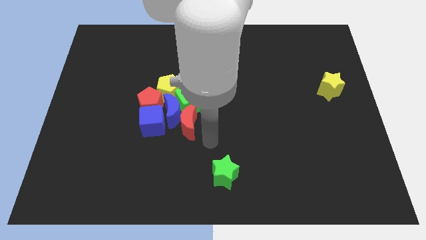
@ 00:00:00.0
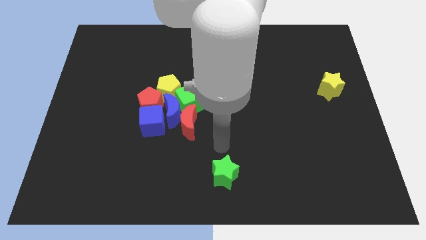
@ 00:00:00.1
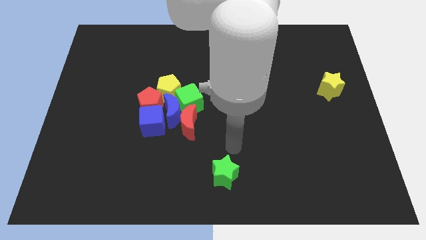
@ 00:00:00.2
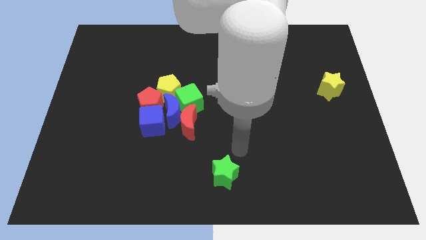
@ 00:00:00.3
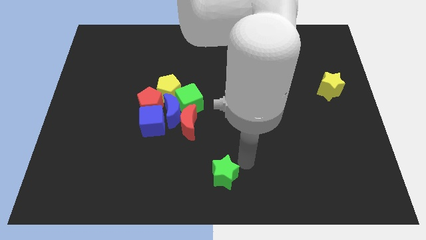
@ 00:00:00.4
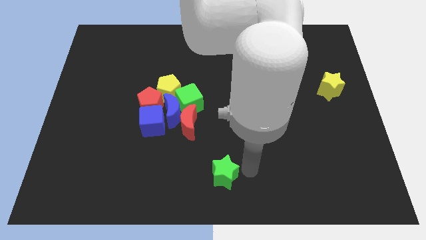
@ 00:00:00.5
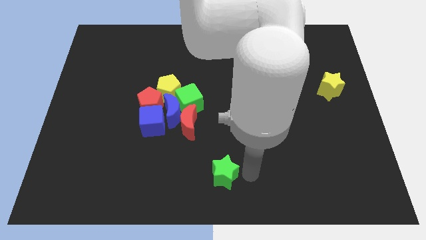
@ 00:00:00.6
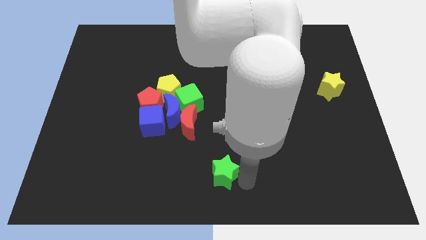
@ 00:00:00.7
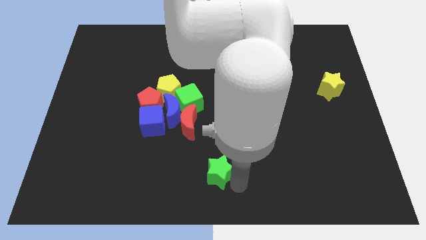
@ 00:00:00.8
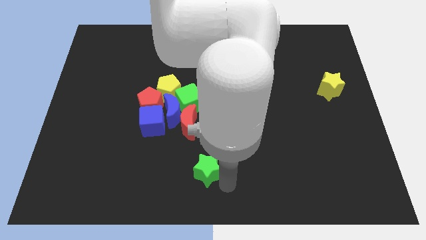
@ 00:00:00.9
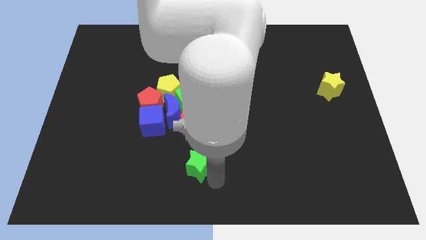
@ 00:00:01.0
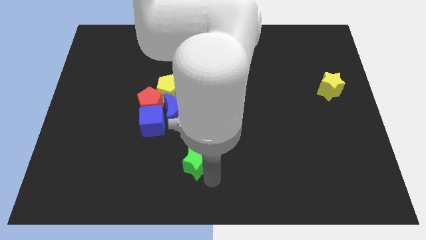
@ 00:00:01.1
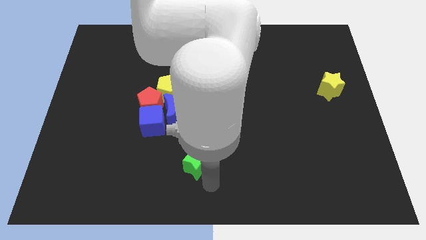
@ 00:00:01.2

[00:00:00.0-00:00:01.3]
move the green star towards the top left

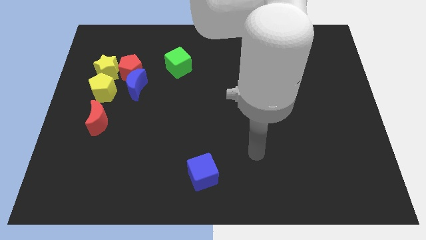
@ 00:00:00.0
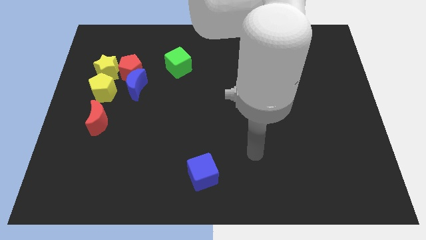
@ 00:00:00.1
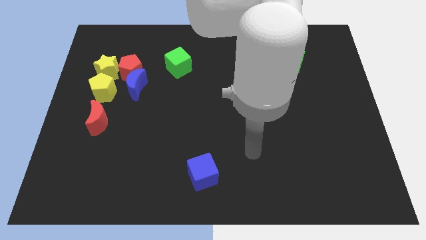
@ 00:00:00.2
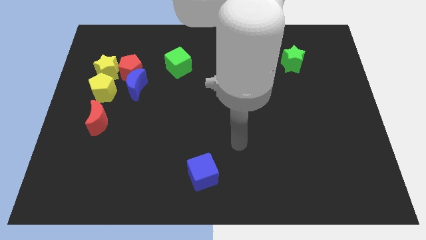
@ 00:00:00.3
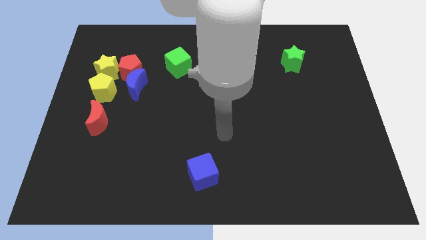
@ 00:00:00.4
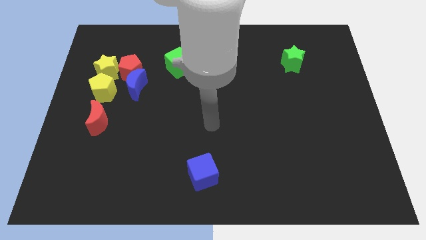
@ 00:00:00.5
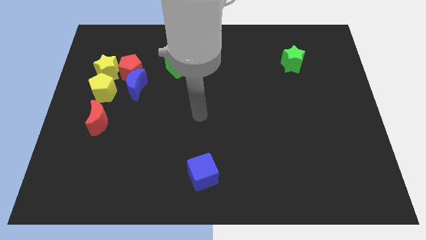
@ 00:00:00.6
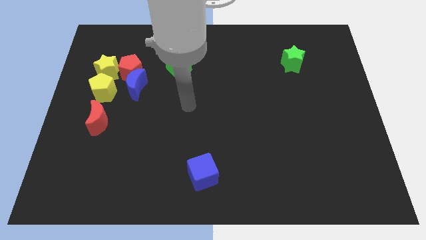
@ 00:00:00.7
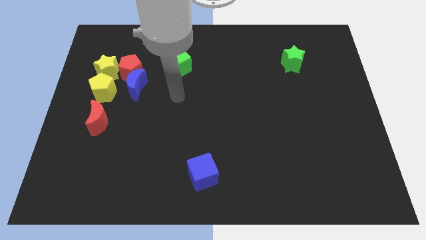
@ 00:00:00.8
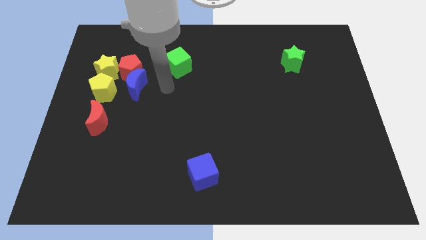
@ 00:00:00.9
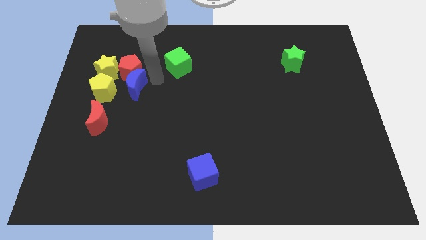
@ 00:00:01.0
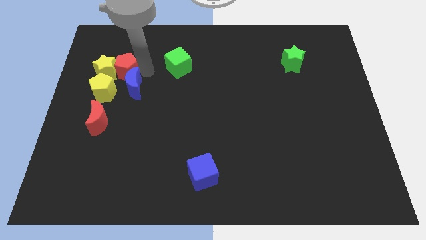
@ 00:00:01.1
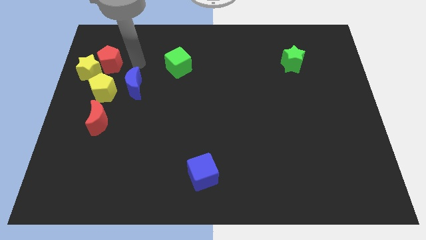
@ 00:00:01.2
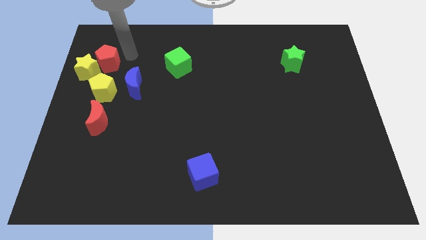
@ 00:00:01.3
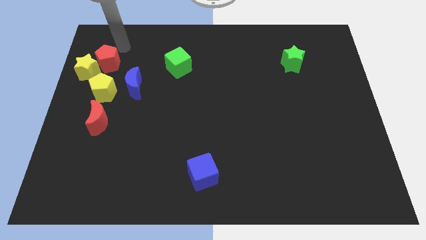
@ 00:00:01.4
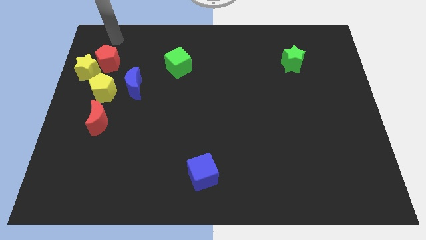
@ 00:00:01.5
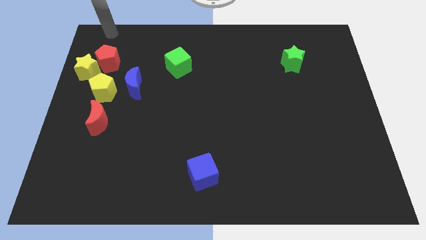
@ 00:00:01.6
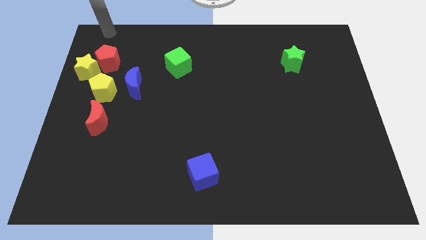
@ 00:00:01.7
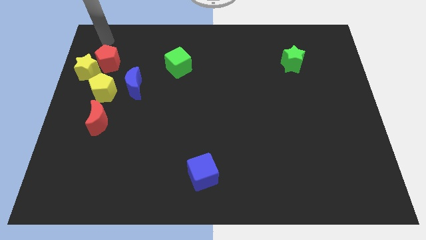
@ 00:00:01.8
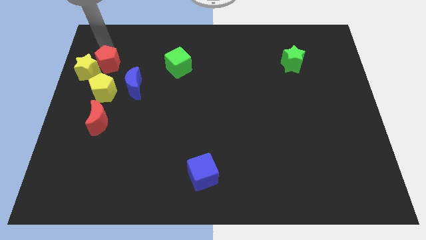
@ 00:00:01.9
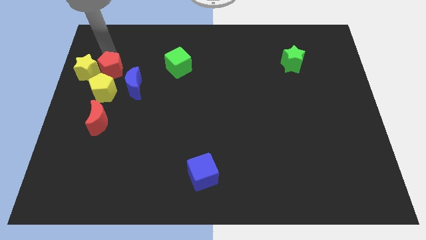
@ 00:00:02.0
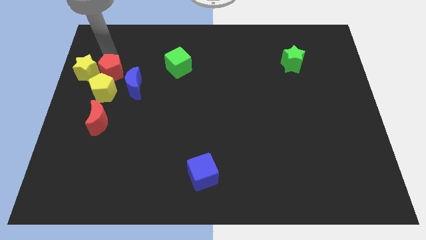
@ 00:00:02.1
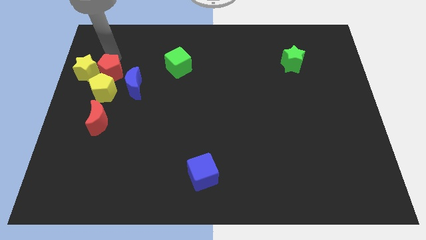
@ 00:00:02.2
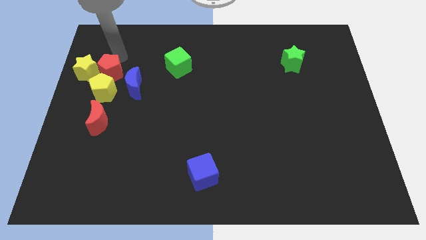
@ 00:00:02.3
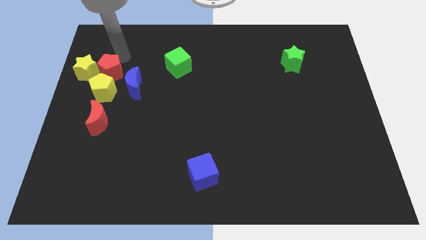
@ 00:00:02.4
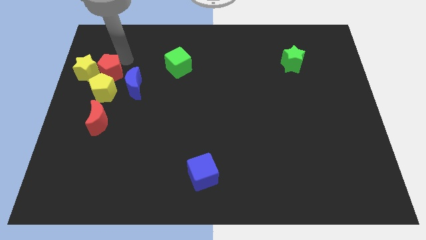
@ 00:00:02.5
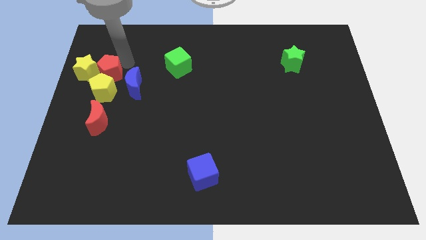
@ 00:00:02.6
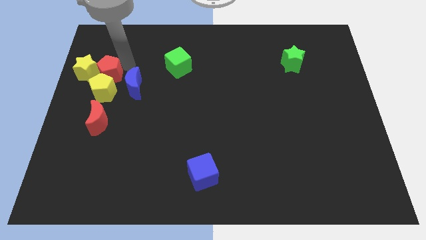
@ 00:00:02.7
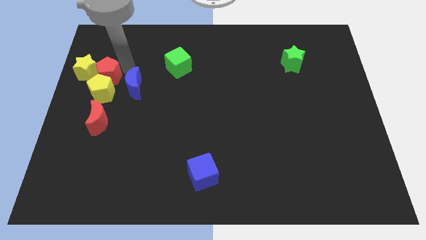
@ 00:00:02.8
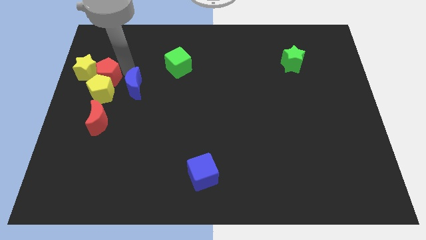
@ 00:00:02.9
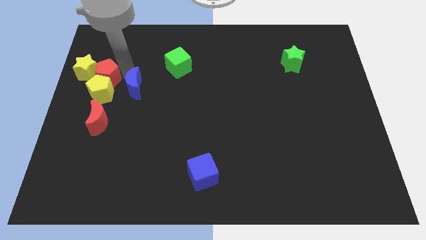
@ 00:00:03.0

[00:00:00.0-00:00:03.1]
slide red pentagon into yellow blocks

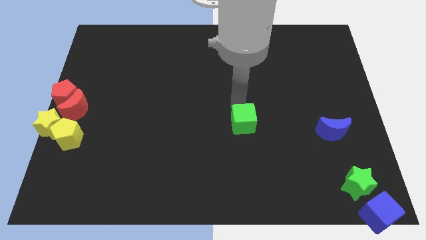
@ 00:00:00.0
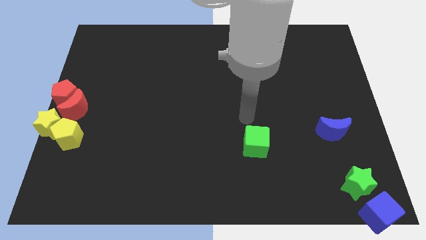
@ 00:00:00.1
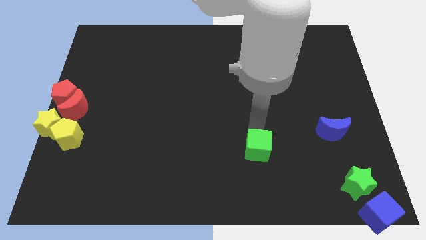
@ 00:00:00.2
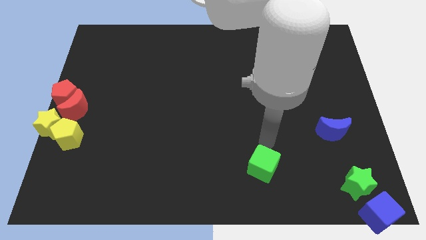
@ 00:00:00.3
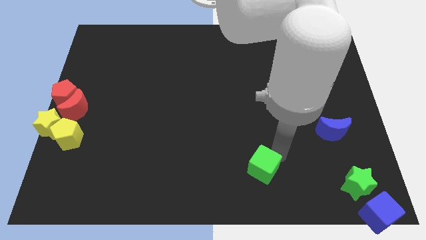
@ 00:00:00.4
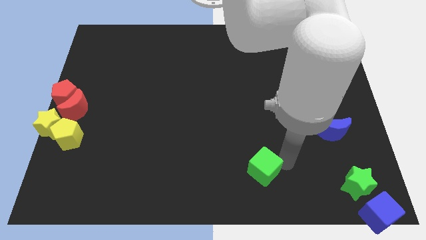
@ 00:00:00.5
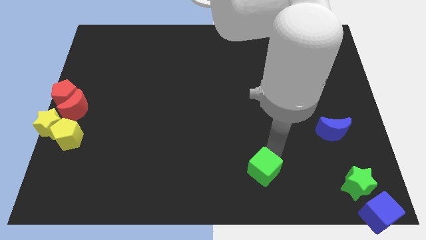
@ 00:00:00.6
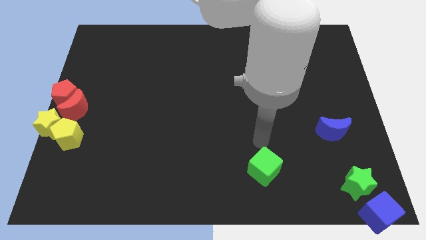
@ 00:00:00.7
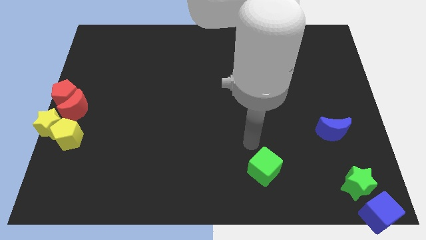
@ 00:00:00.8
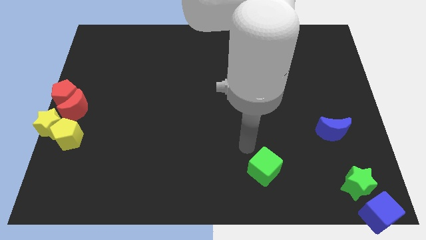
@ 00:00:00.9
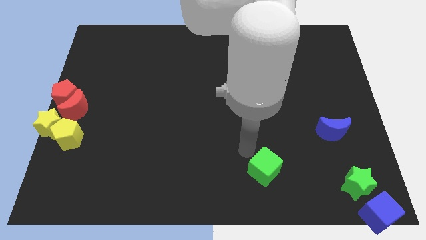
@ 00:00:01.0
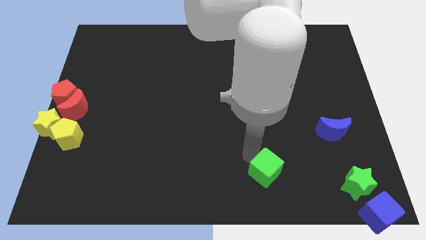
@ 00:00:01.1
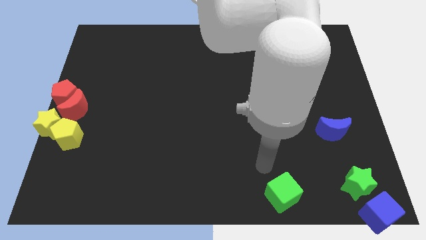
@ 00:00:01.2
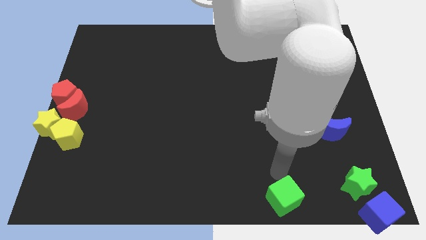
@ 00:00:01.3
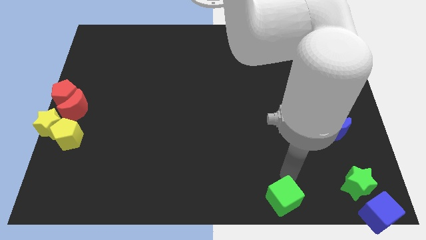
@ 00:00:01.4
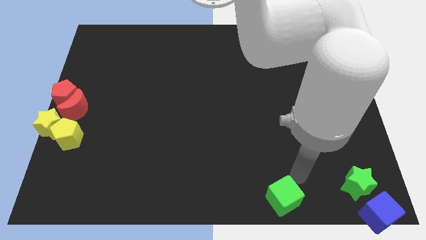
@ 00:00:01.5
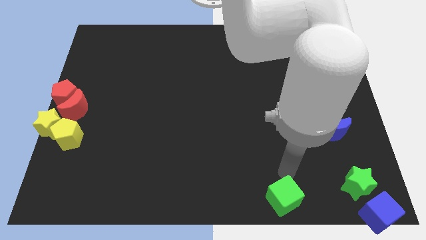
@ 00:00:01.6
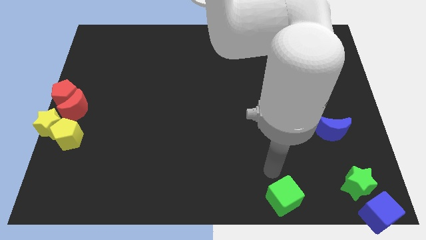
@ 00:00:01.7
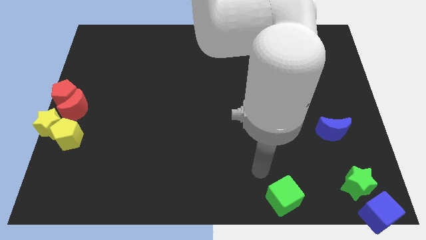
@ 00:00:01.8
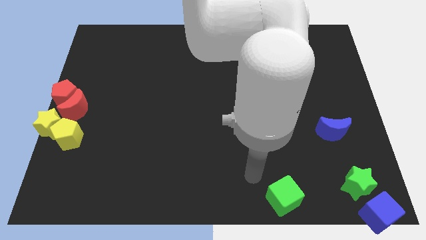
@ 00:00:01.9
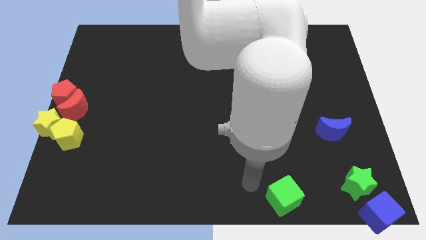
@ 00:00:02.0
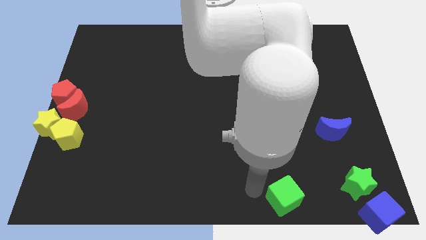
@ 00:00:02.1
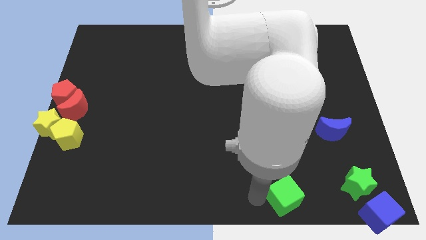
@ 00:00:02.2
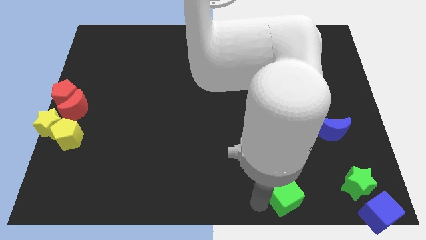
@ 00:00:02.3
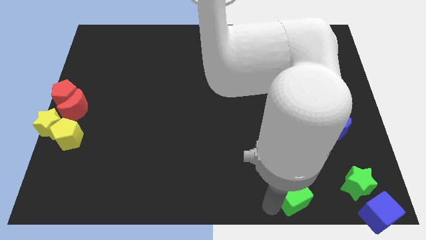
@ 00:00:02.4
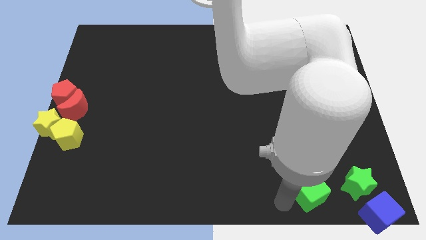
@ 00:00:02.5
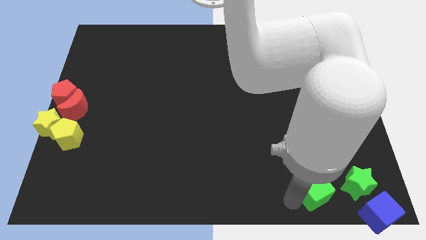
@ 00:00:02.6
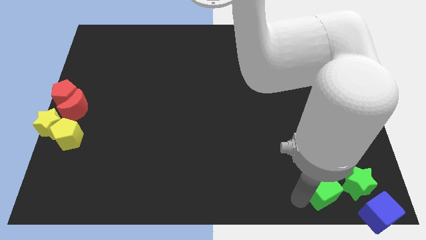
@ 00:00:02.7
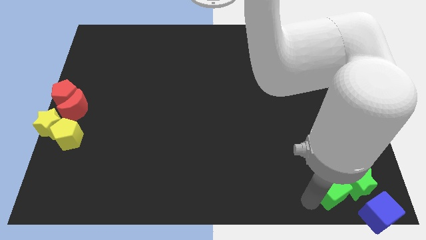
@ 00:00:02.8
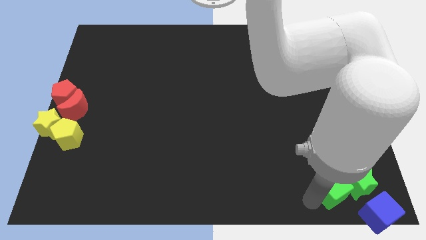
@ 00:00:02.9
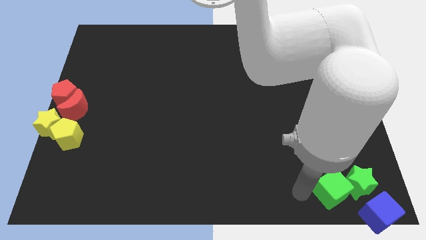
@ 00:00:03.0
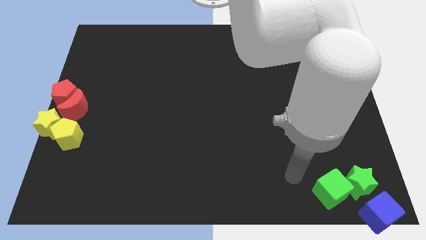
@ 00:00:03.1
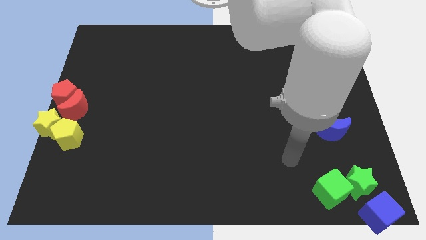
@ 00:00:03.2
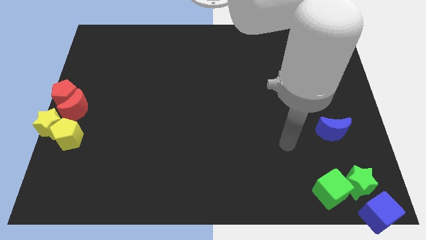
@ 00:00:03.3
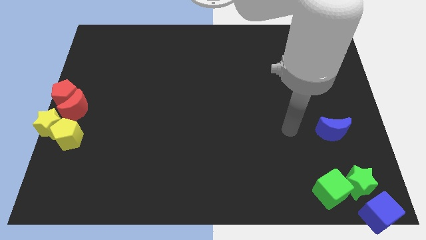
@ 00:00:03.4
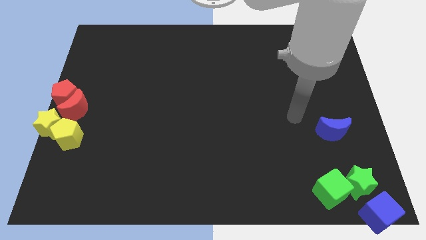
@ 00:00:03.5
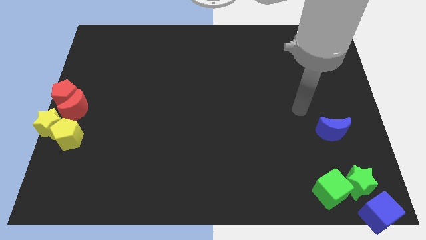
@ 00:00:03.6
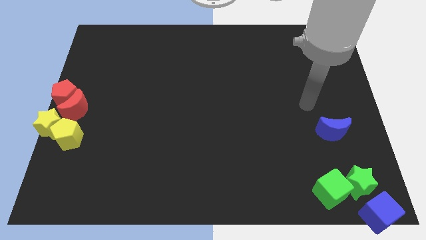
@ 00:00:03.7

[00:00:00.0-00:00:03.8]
move the green cube into the green star

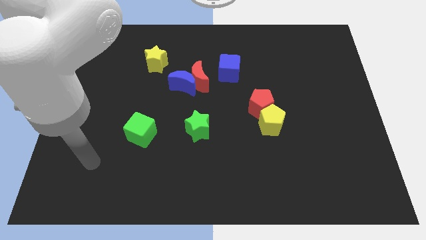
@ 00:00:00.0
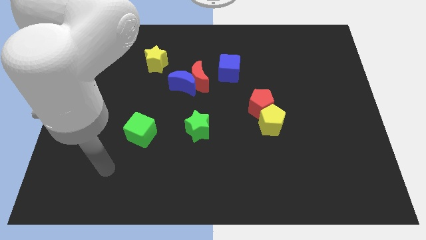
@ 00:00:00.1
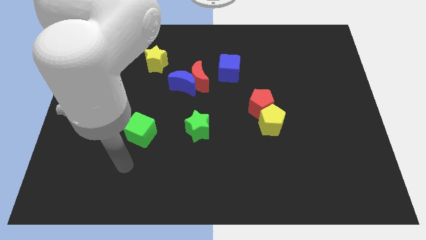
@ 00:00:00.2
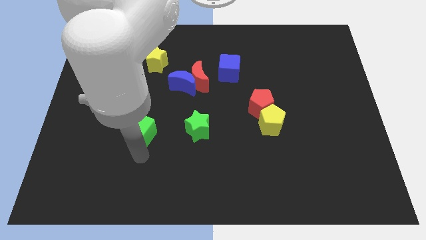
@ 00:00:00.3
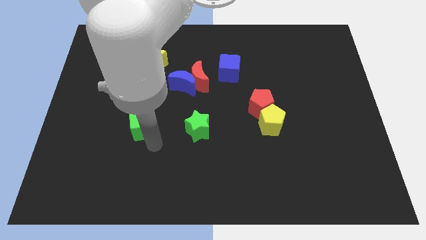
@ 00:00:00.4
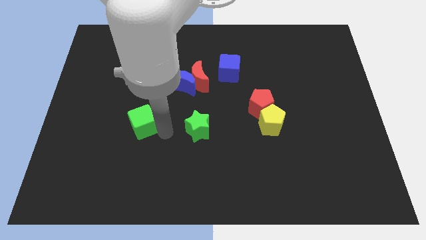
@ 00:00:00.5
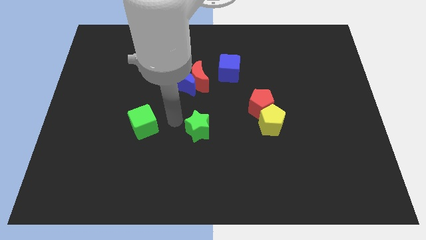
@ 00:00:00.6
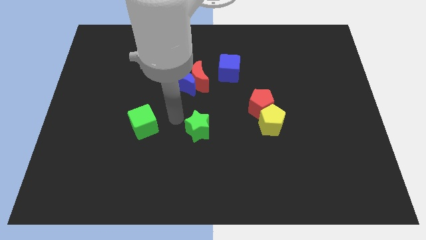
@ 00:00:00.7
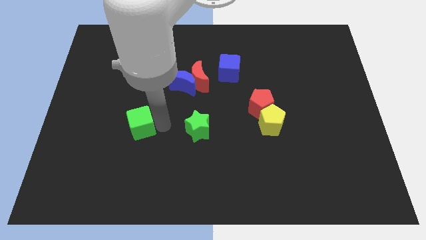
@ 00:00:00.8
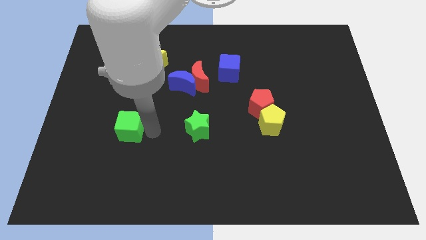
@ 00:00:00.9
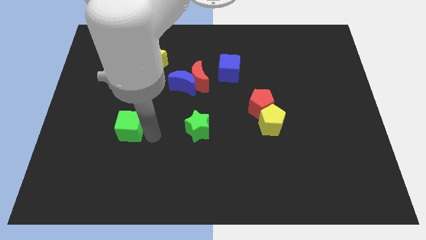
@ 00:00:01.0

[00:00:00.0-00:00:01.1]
tap your arm on the right side of green cube
